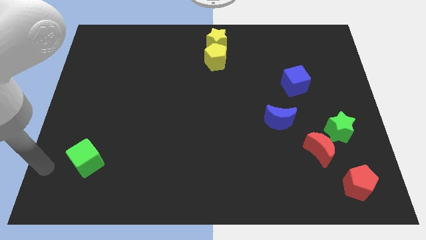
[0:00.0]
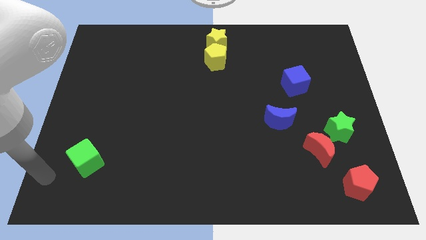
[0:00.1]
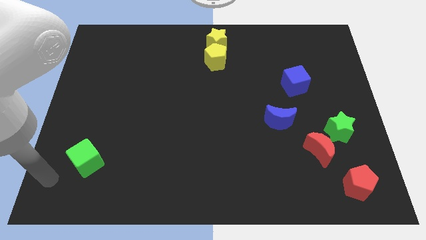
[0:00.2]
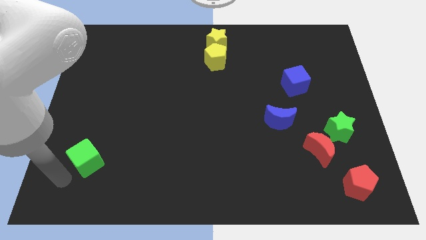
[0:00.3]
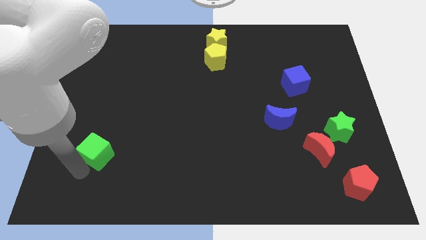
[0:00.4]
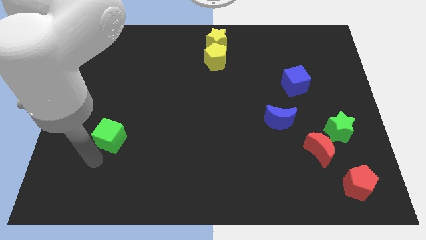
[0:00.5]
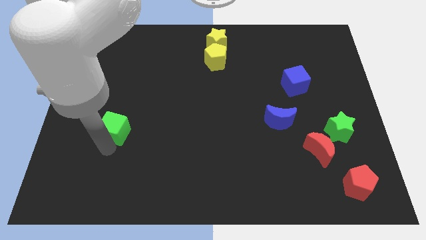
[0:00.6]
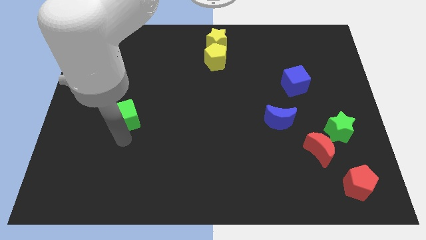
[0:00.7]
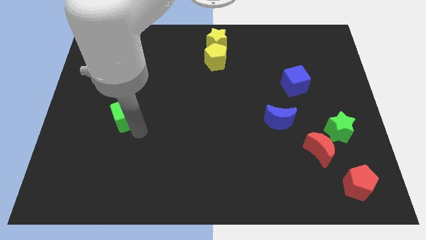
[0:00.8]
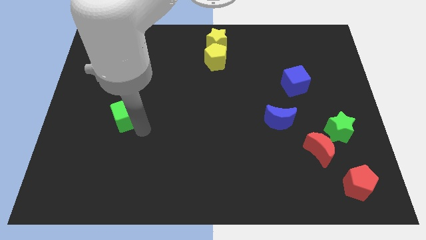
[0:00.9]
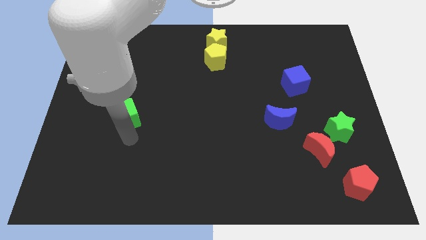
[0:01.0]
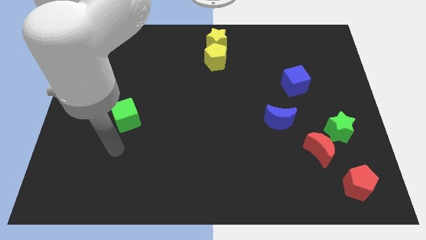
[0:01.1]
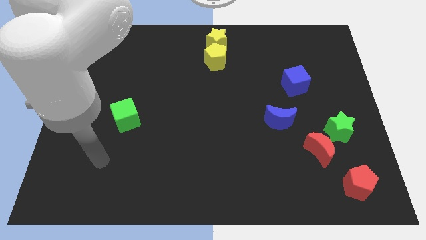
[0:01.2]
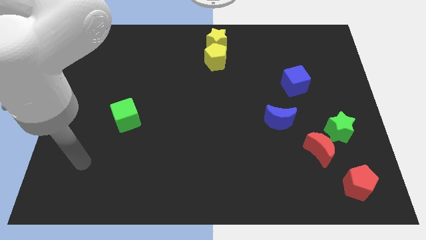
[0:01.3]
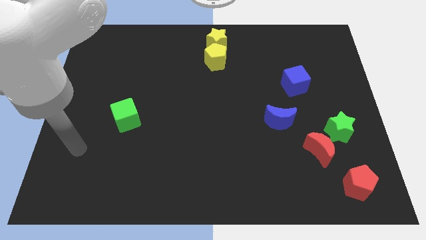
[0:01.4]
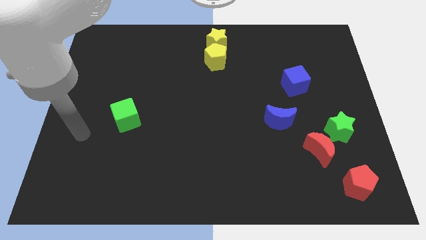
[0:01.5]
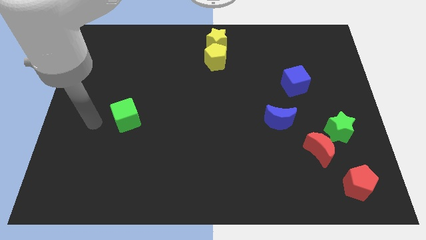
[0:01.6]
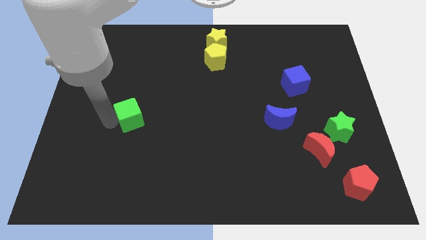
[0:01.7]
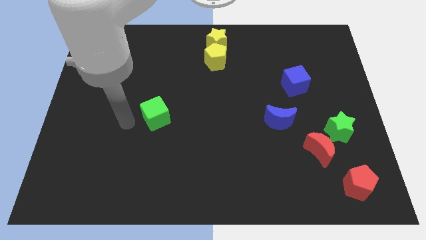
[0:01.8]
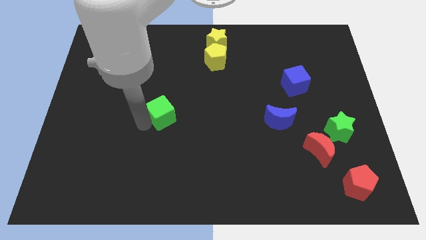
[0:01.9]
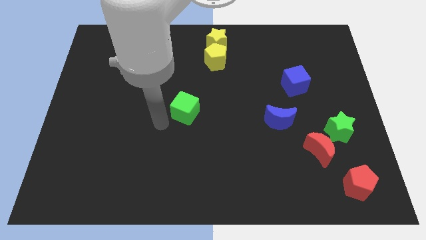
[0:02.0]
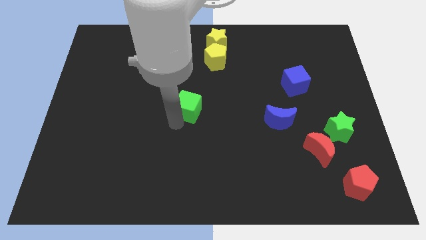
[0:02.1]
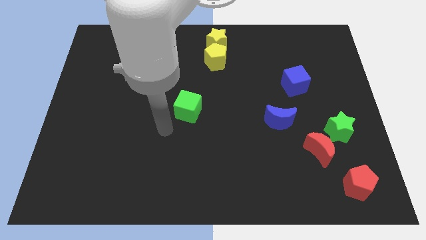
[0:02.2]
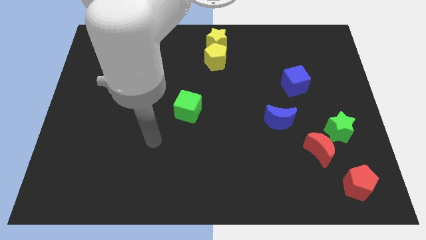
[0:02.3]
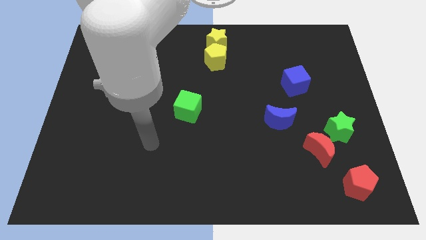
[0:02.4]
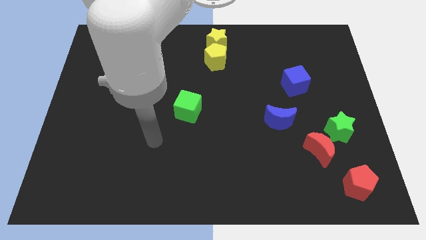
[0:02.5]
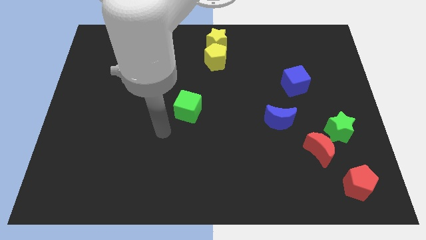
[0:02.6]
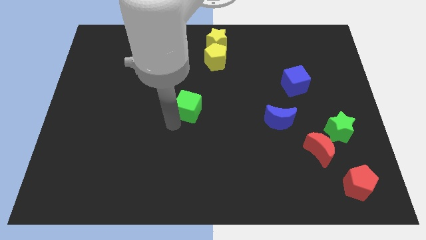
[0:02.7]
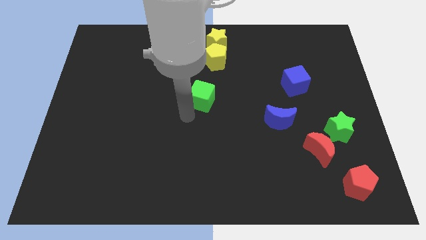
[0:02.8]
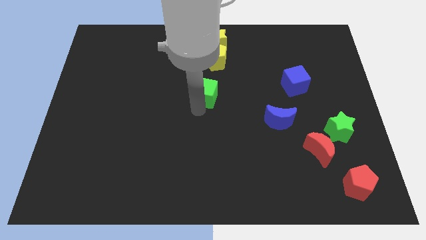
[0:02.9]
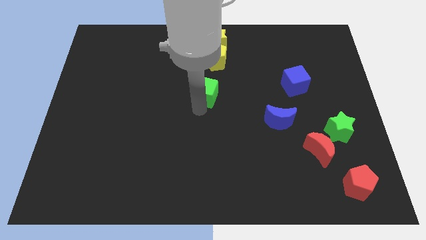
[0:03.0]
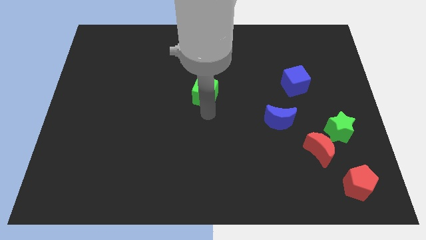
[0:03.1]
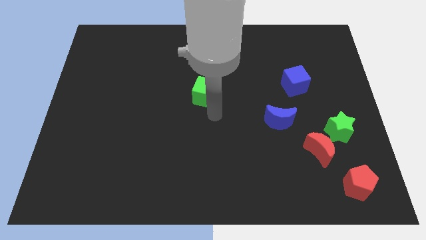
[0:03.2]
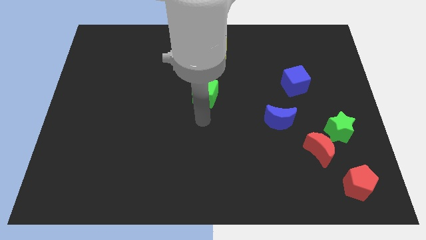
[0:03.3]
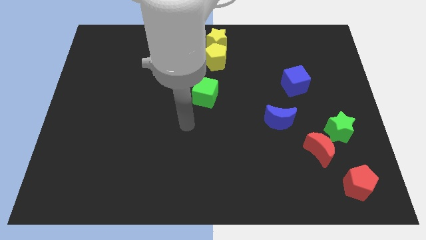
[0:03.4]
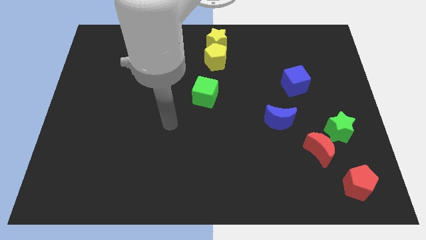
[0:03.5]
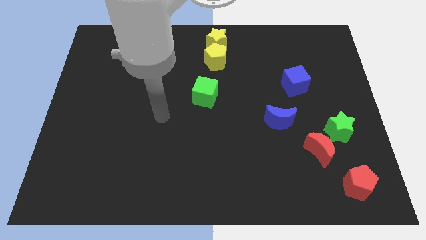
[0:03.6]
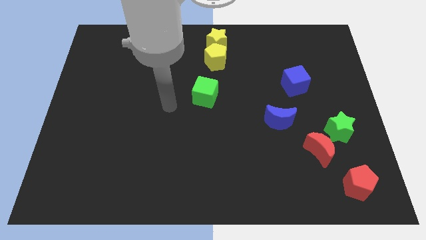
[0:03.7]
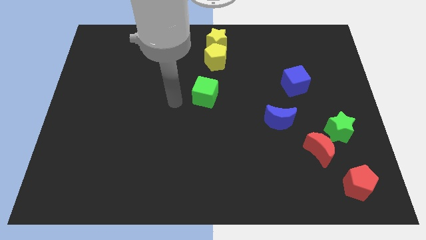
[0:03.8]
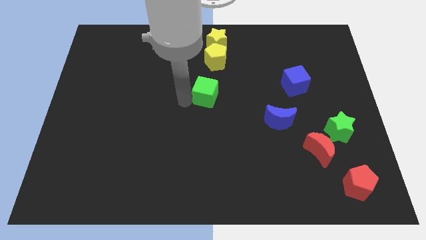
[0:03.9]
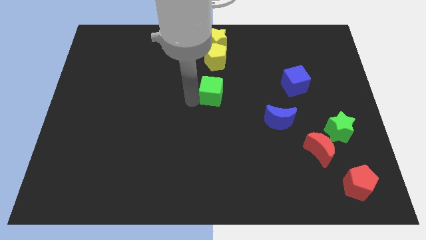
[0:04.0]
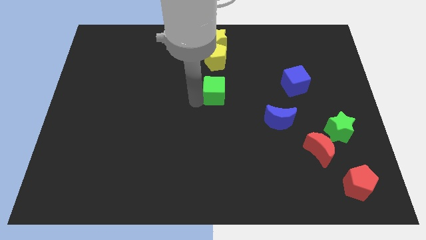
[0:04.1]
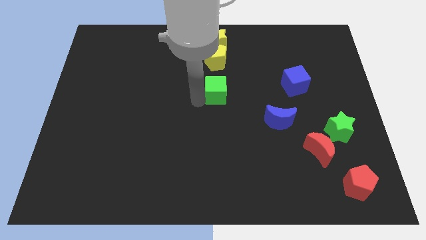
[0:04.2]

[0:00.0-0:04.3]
place the green cube vertically below the yellow pentagon

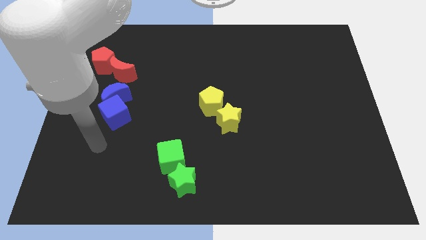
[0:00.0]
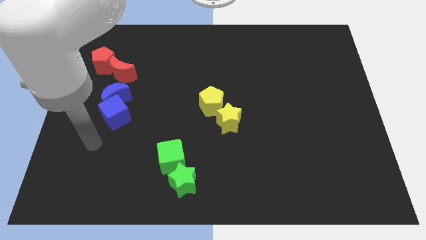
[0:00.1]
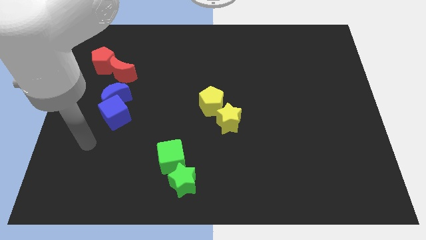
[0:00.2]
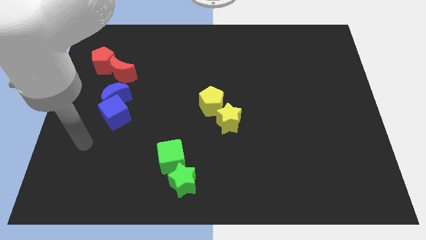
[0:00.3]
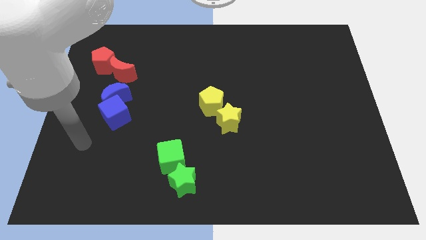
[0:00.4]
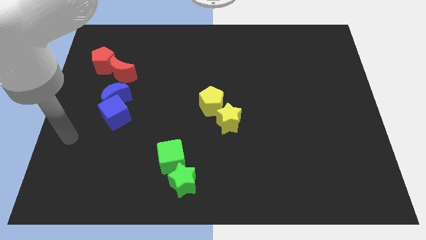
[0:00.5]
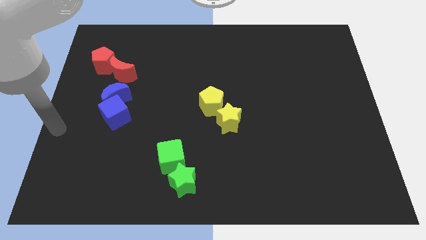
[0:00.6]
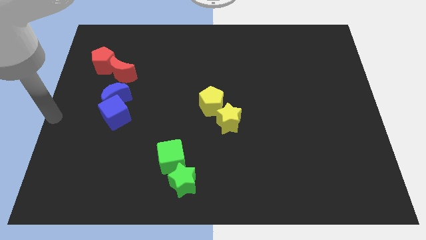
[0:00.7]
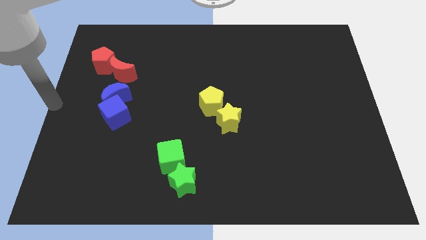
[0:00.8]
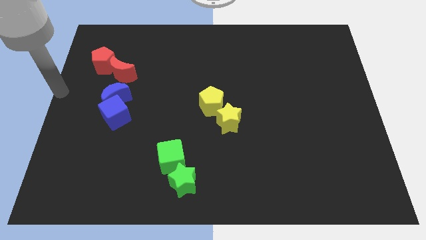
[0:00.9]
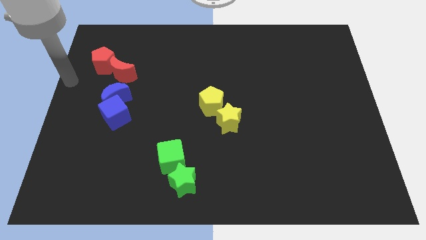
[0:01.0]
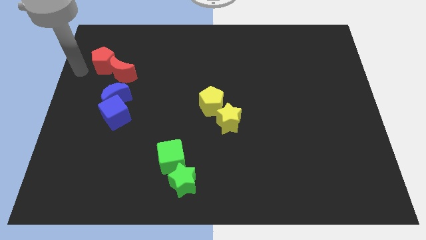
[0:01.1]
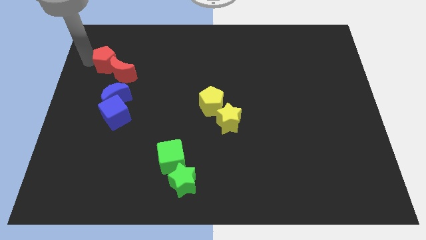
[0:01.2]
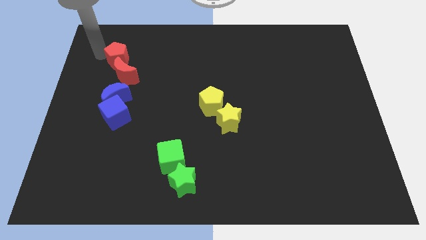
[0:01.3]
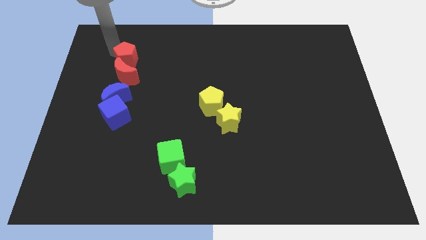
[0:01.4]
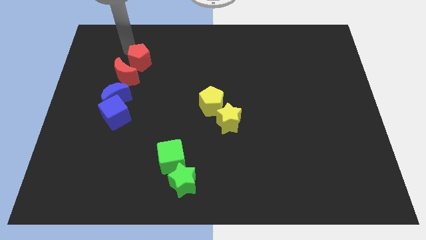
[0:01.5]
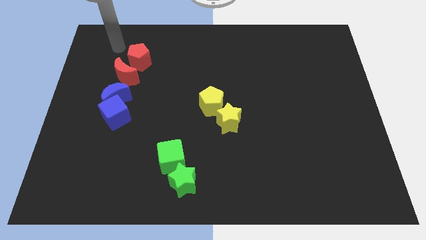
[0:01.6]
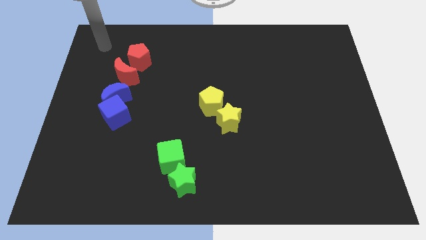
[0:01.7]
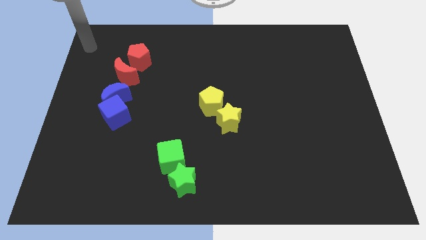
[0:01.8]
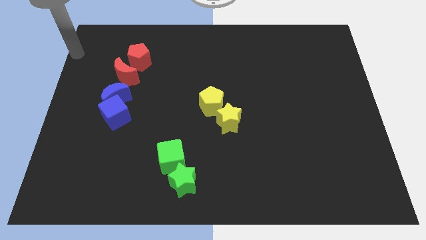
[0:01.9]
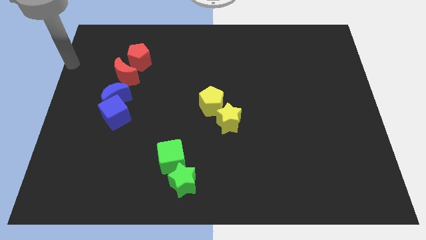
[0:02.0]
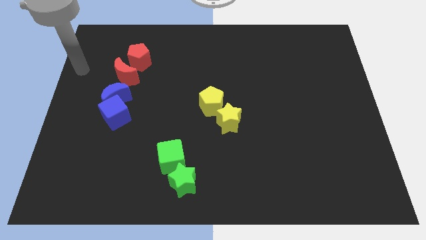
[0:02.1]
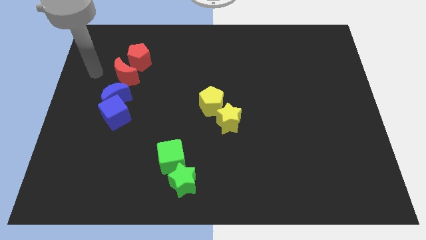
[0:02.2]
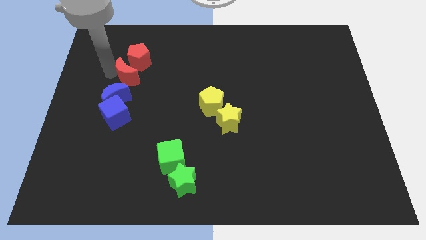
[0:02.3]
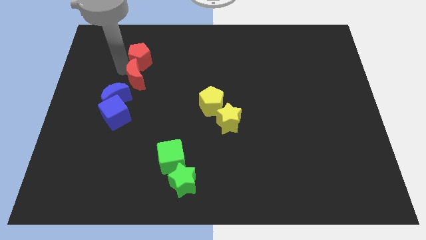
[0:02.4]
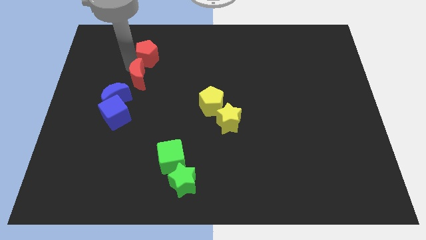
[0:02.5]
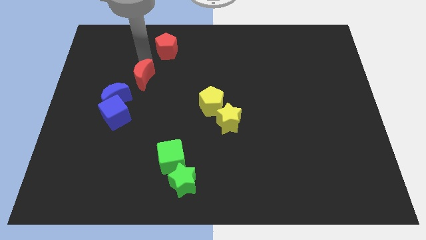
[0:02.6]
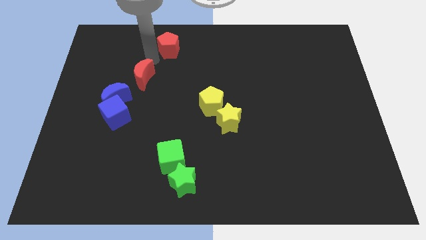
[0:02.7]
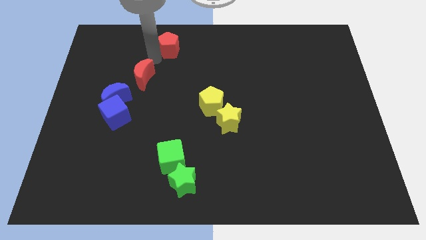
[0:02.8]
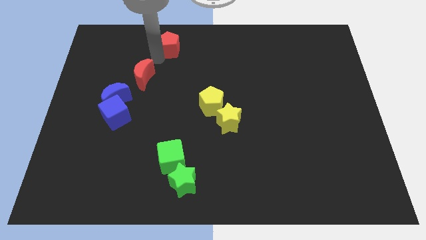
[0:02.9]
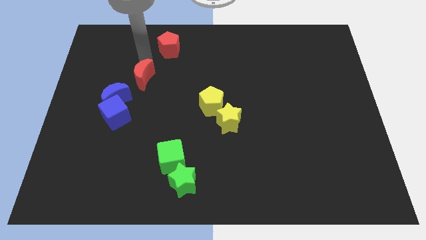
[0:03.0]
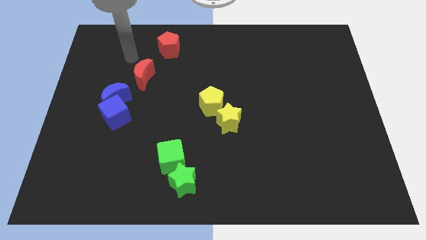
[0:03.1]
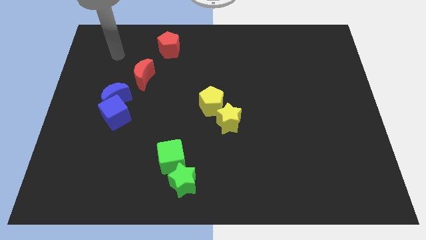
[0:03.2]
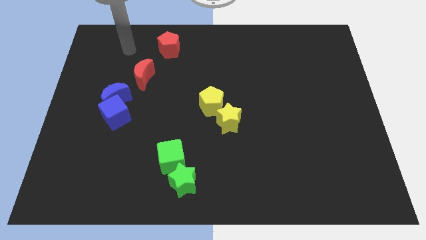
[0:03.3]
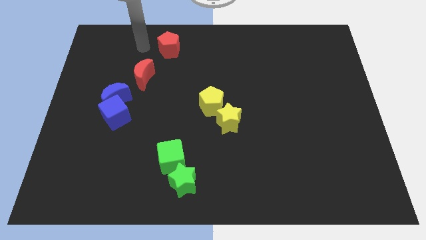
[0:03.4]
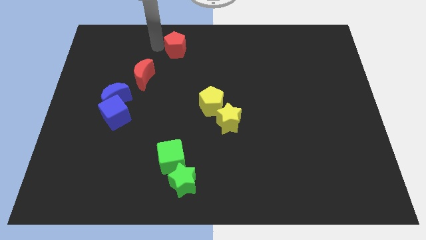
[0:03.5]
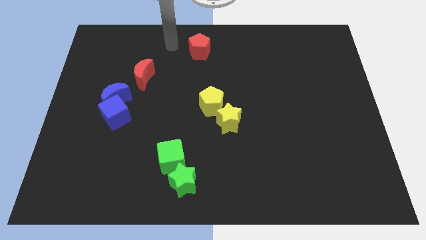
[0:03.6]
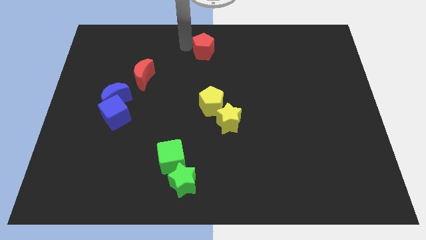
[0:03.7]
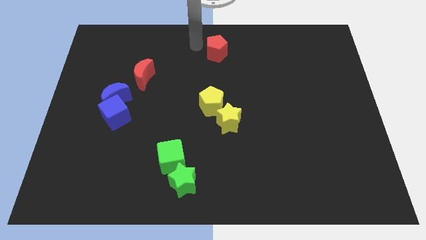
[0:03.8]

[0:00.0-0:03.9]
move the red pentagon to the top of the yellow pentagon

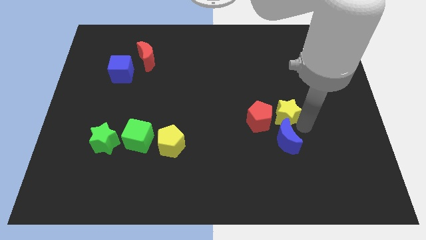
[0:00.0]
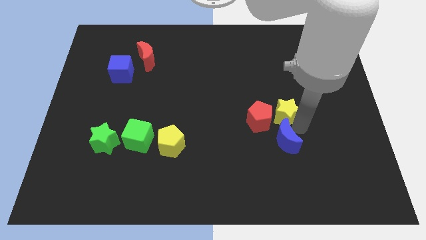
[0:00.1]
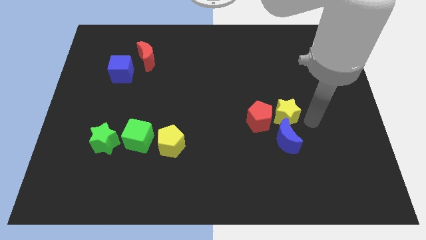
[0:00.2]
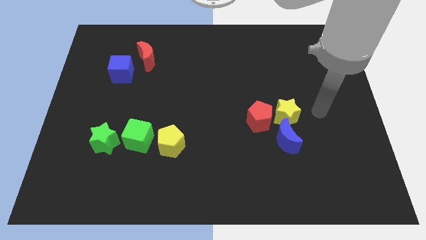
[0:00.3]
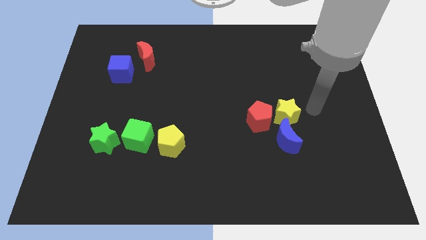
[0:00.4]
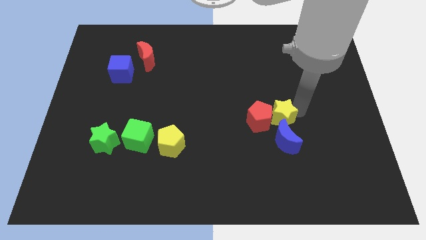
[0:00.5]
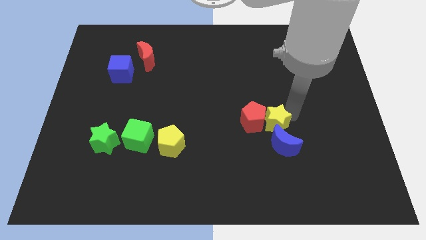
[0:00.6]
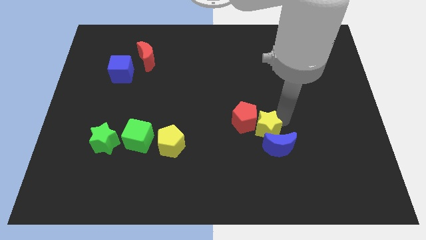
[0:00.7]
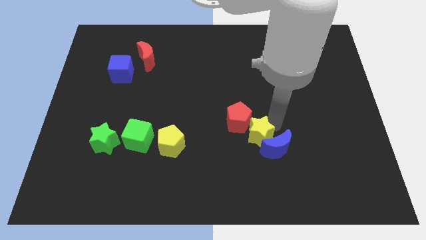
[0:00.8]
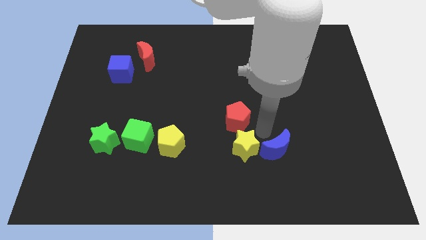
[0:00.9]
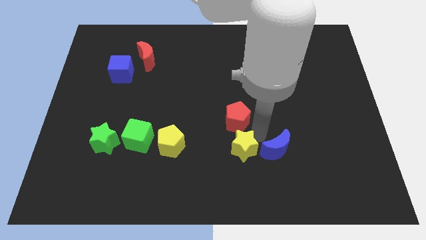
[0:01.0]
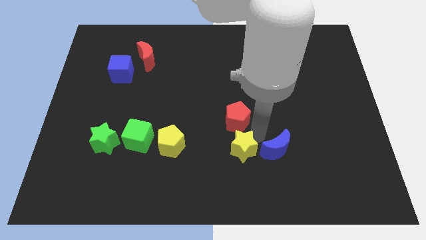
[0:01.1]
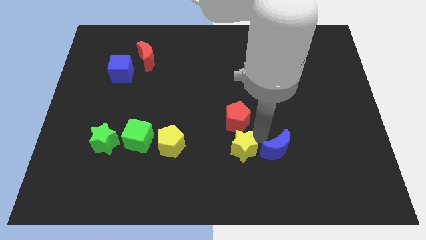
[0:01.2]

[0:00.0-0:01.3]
push the yellow star horizontally to the right side of the yellow pentagon
